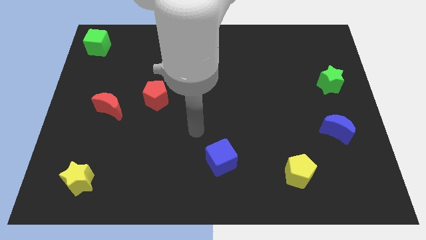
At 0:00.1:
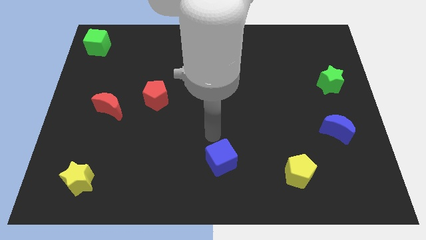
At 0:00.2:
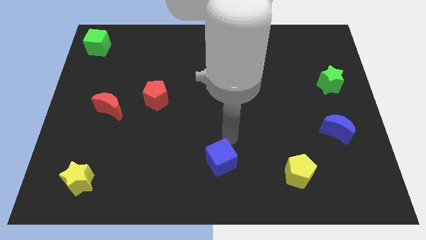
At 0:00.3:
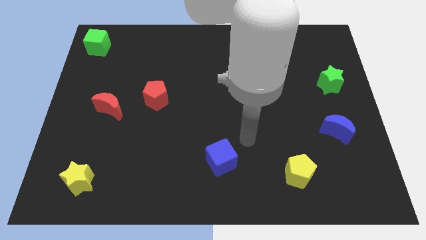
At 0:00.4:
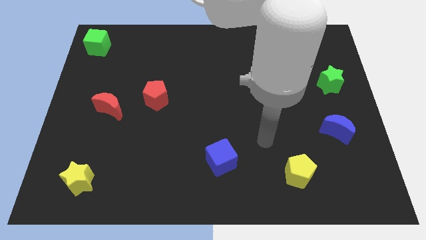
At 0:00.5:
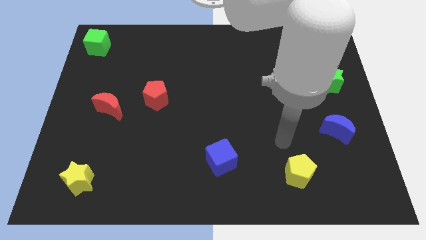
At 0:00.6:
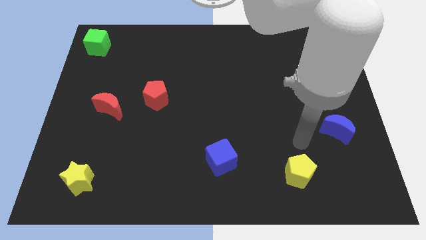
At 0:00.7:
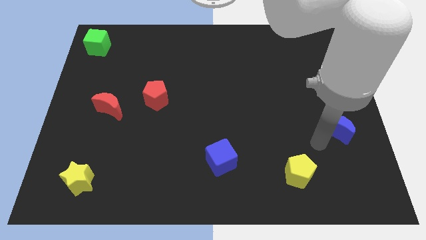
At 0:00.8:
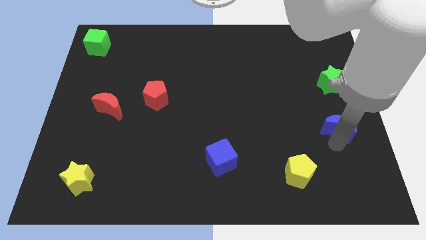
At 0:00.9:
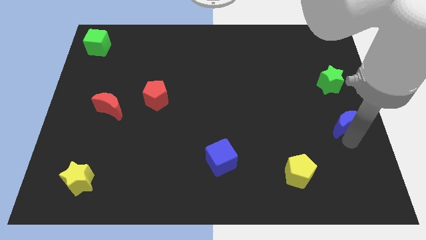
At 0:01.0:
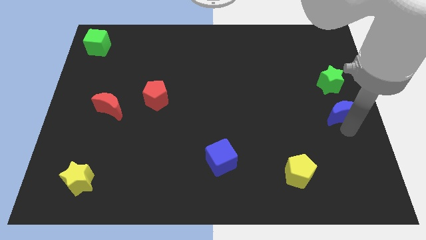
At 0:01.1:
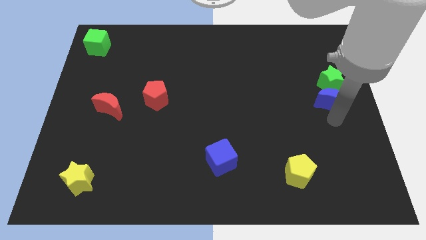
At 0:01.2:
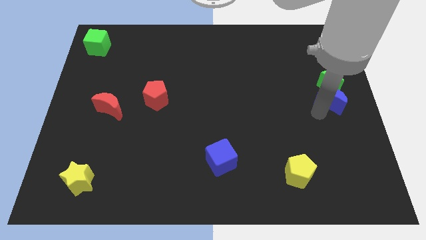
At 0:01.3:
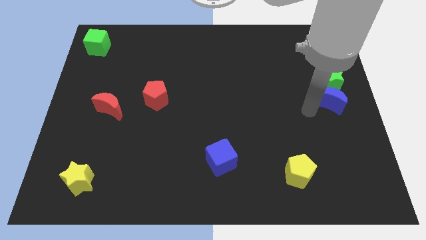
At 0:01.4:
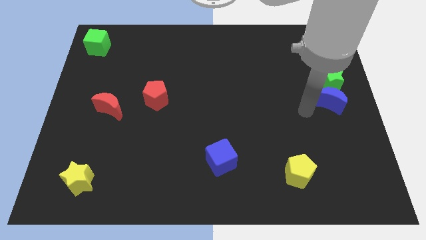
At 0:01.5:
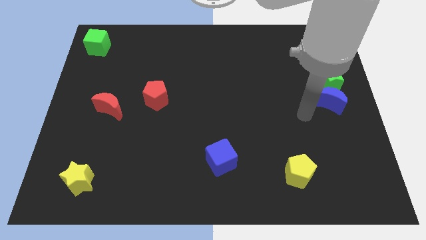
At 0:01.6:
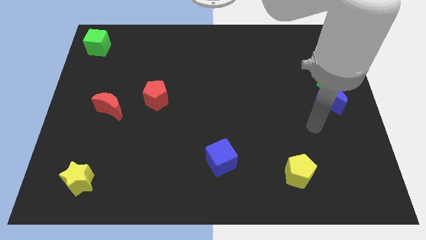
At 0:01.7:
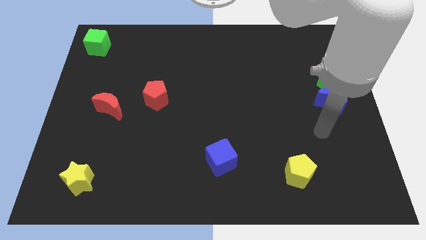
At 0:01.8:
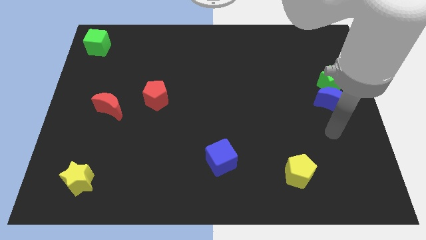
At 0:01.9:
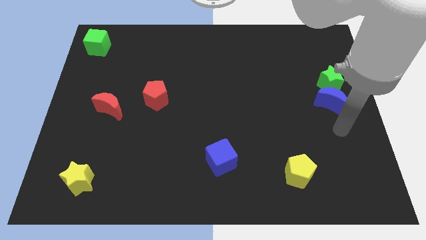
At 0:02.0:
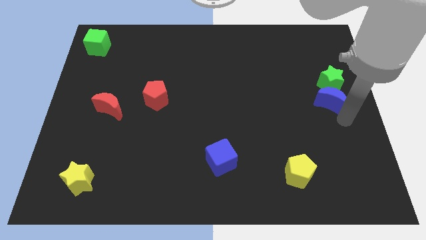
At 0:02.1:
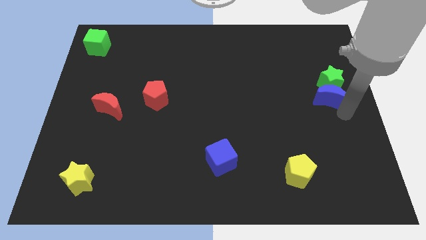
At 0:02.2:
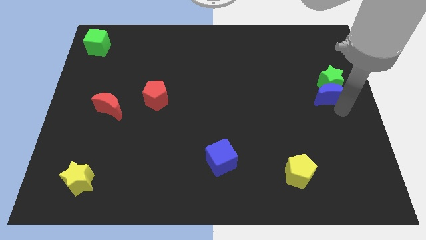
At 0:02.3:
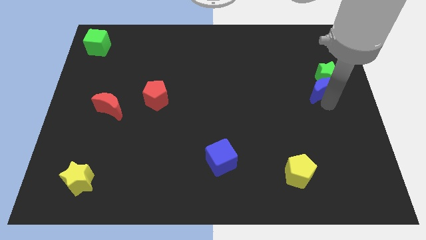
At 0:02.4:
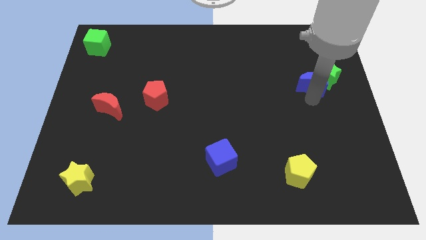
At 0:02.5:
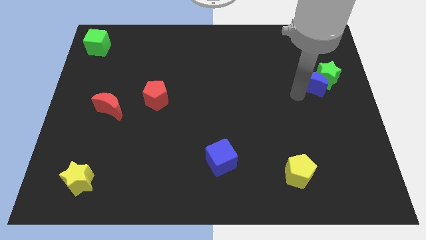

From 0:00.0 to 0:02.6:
push blue moon towards green star

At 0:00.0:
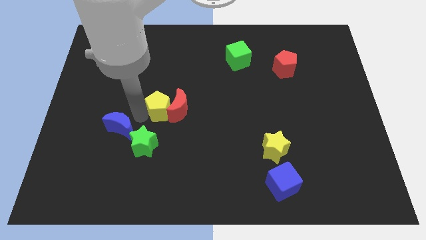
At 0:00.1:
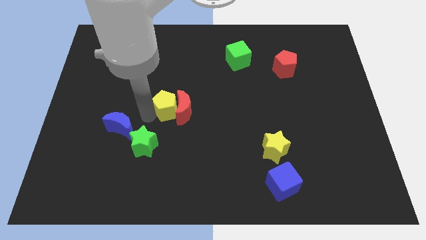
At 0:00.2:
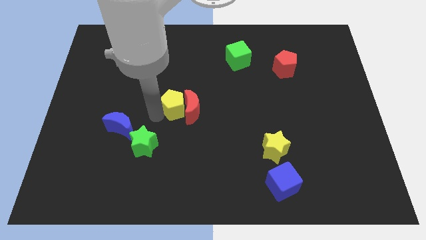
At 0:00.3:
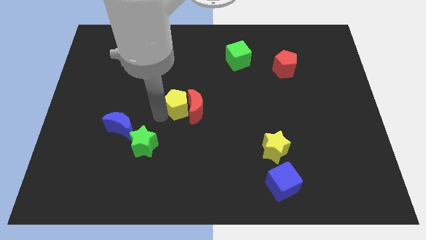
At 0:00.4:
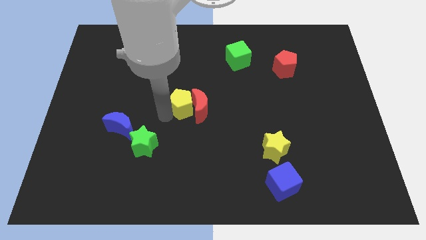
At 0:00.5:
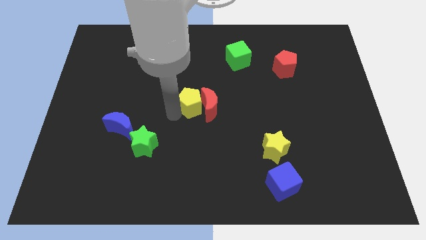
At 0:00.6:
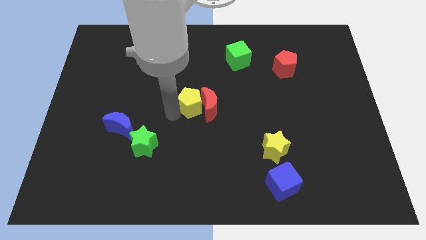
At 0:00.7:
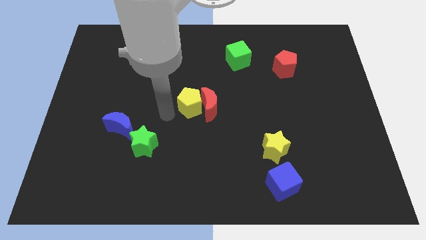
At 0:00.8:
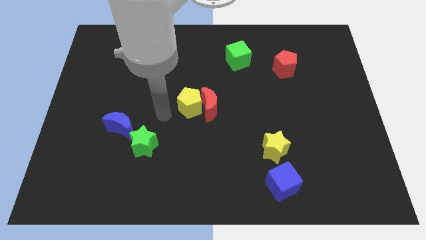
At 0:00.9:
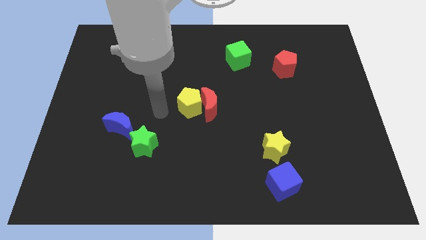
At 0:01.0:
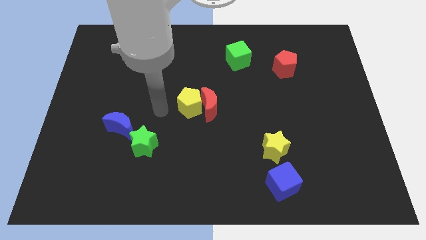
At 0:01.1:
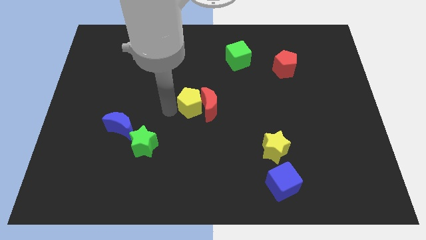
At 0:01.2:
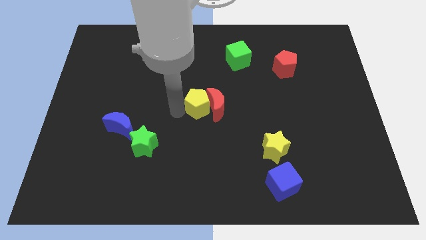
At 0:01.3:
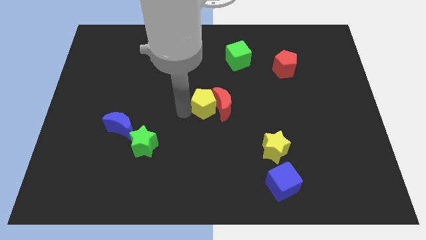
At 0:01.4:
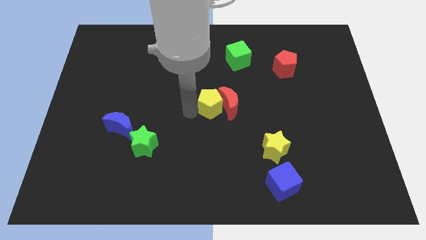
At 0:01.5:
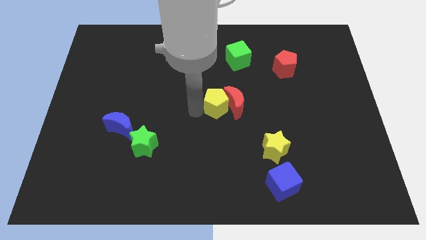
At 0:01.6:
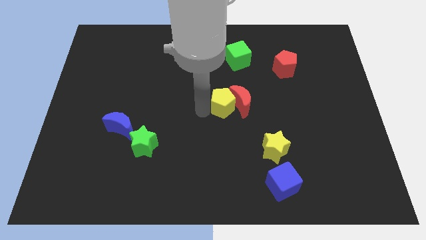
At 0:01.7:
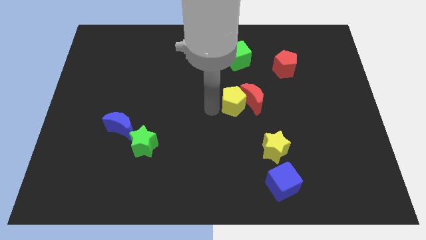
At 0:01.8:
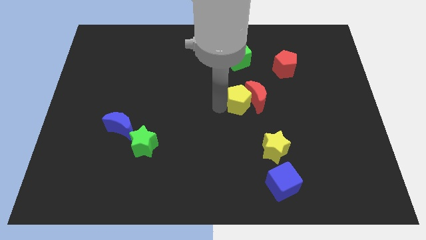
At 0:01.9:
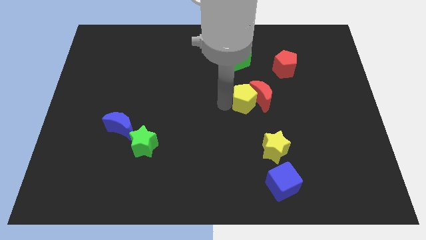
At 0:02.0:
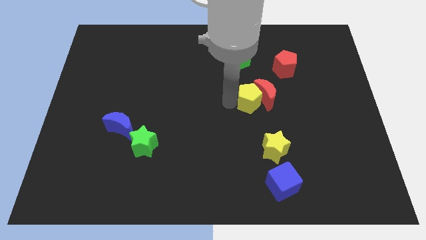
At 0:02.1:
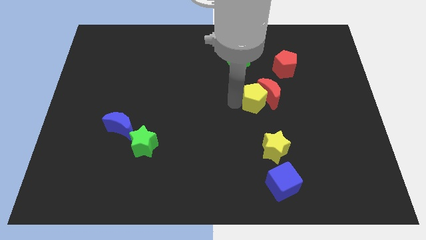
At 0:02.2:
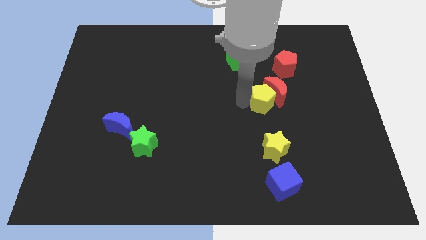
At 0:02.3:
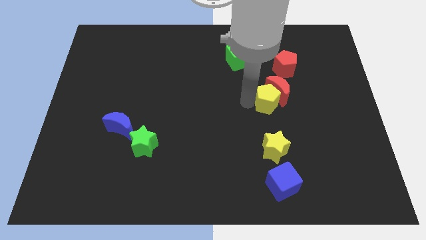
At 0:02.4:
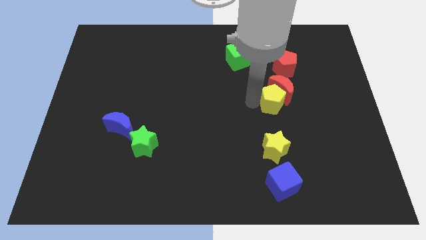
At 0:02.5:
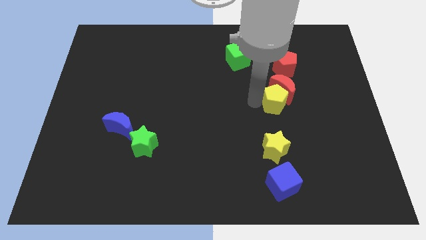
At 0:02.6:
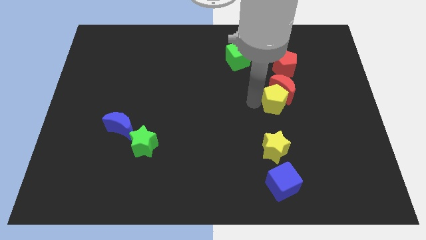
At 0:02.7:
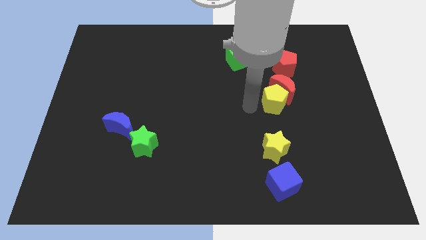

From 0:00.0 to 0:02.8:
place the yellow pentagon to the top of the yellow star

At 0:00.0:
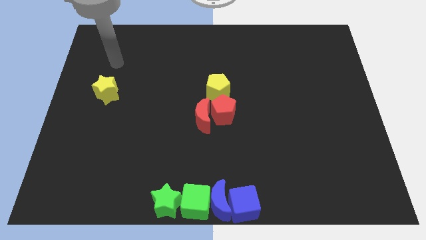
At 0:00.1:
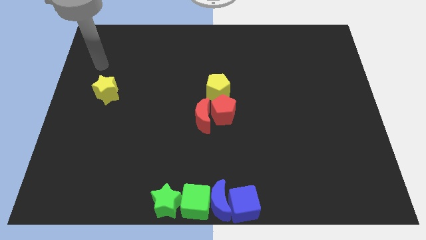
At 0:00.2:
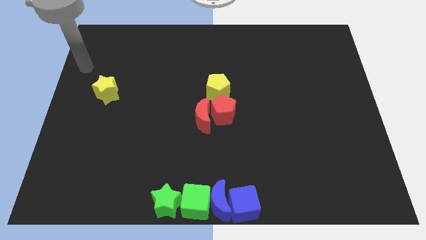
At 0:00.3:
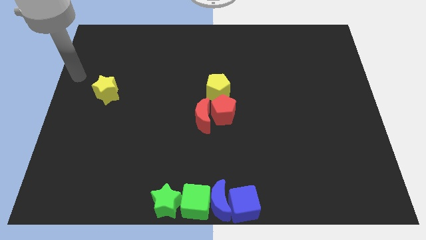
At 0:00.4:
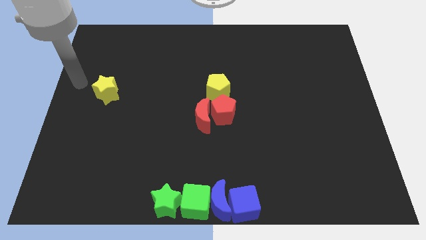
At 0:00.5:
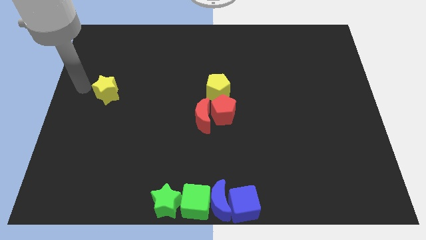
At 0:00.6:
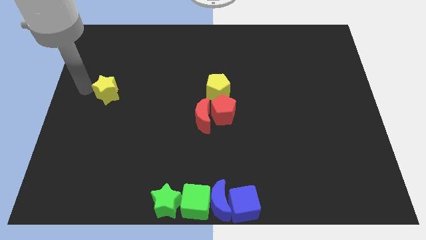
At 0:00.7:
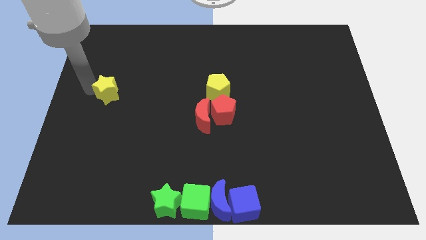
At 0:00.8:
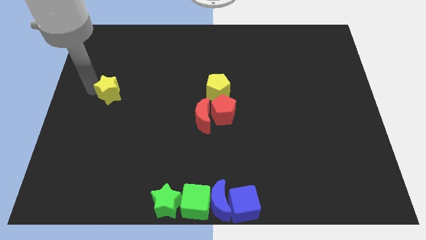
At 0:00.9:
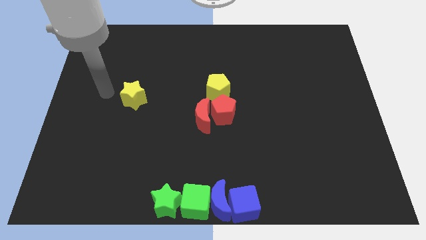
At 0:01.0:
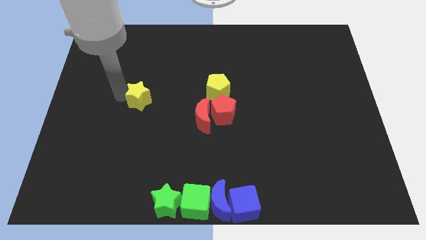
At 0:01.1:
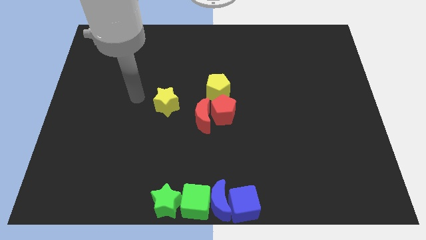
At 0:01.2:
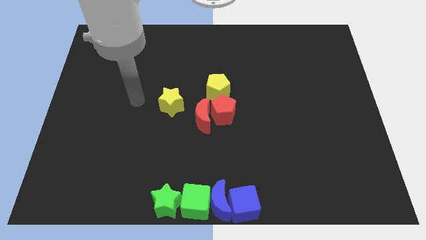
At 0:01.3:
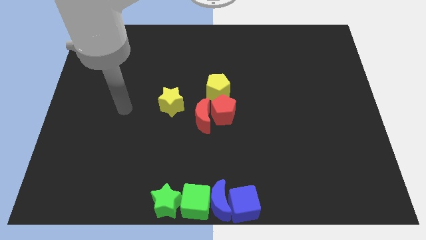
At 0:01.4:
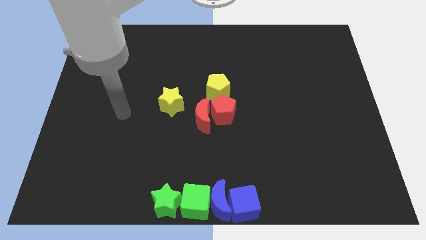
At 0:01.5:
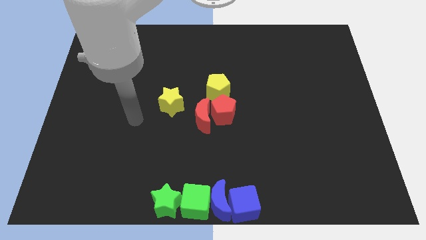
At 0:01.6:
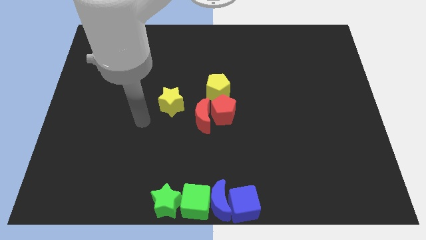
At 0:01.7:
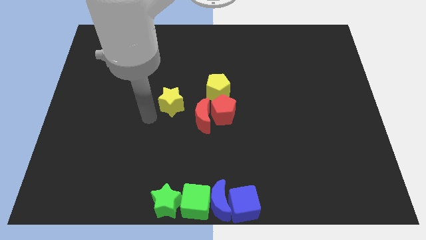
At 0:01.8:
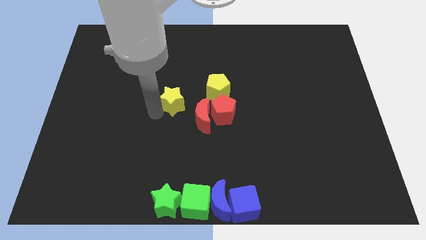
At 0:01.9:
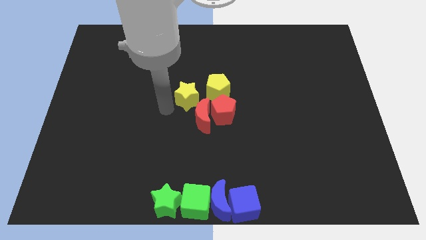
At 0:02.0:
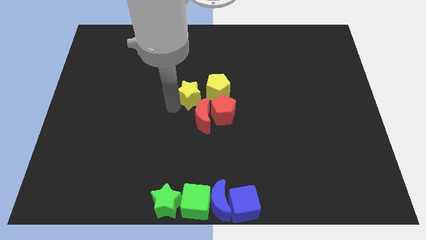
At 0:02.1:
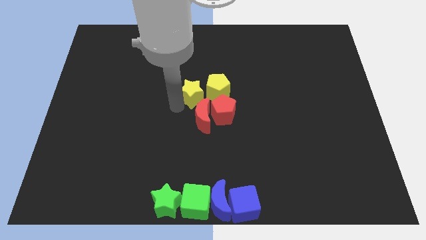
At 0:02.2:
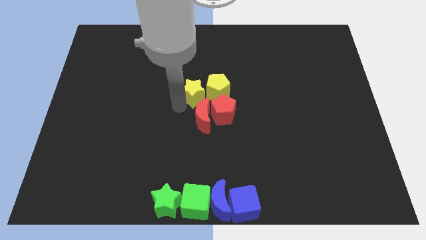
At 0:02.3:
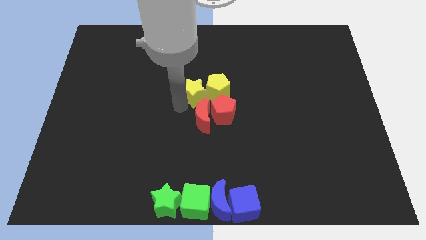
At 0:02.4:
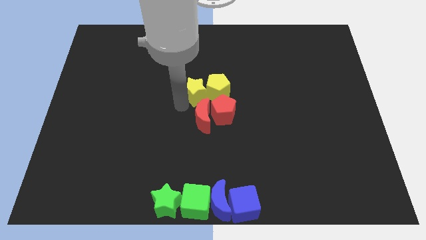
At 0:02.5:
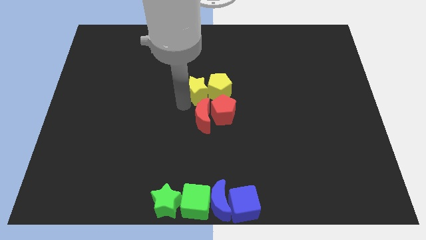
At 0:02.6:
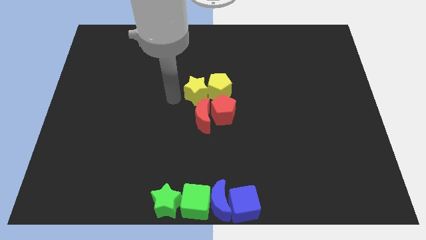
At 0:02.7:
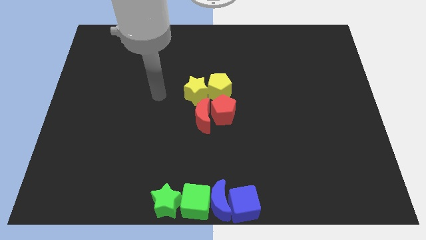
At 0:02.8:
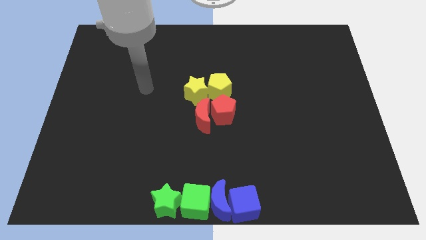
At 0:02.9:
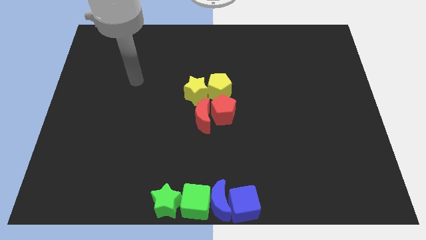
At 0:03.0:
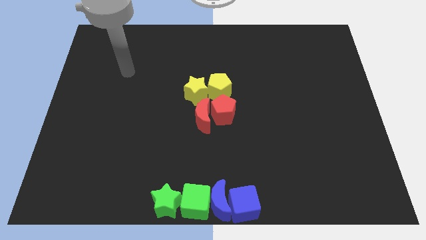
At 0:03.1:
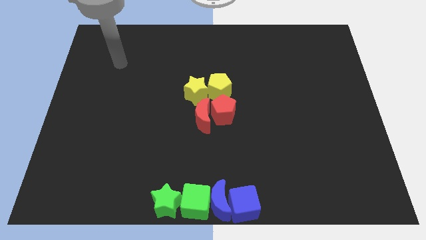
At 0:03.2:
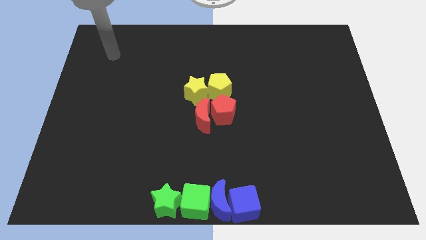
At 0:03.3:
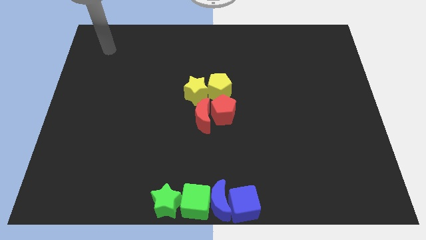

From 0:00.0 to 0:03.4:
move the yellow star into the yellow pentagon

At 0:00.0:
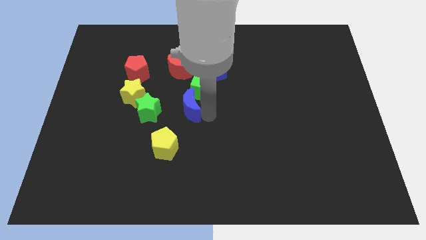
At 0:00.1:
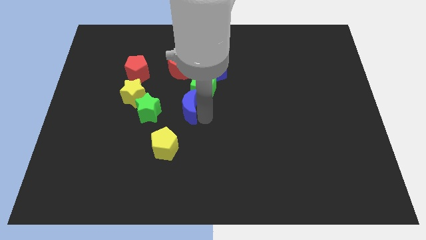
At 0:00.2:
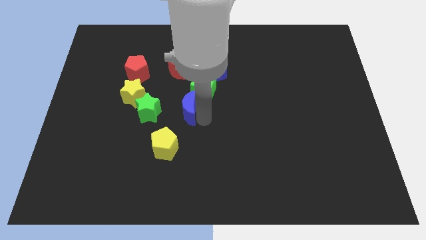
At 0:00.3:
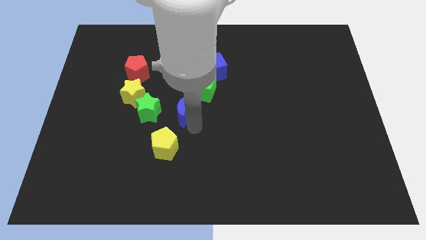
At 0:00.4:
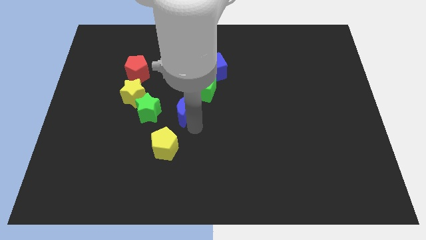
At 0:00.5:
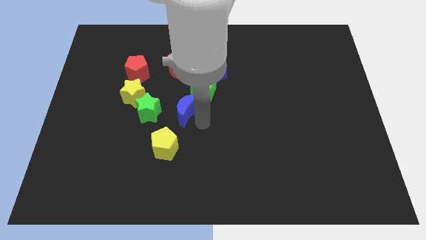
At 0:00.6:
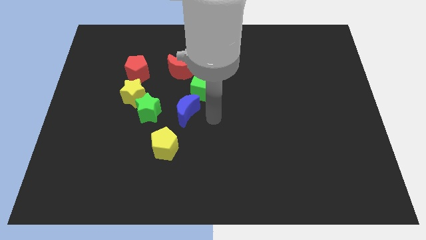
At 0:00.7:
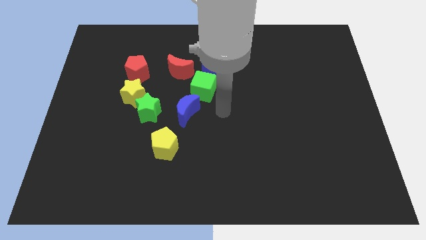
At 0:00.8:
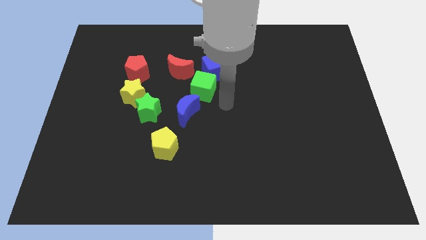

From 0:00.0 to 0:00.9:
place the blue moon diagonal to the yellow pentagon
